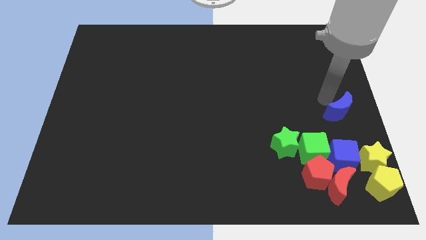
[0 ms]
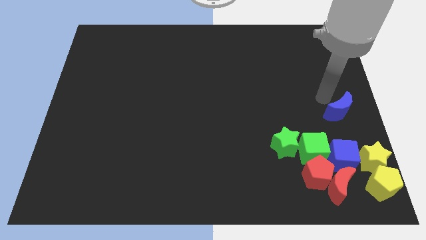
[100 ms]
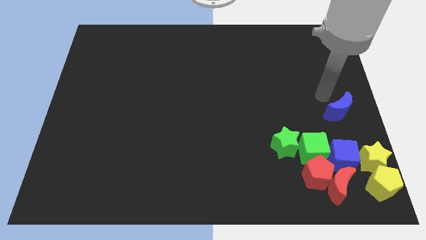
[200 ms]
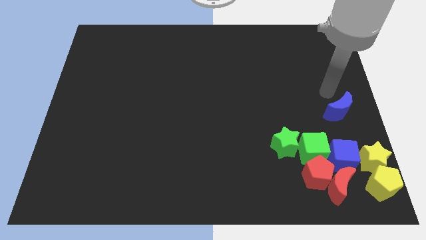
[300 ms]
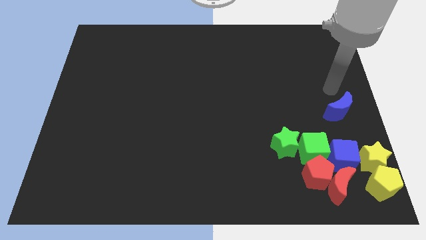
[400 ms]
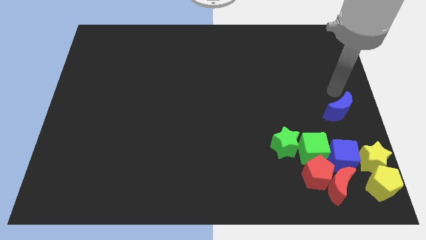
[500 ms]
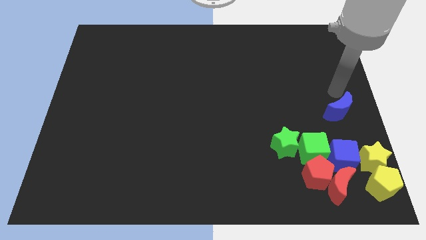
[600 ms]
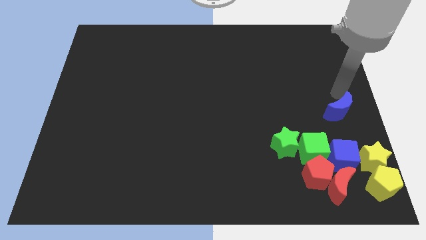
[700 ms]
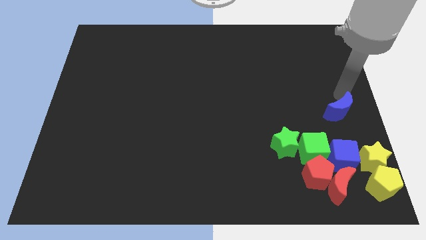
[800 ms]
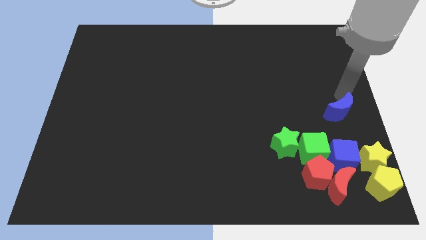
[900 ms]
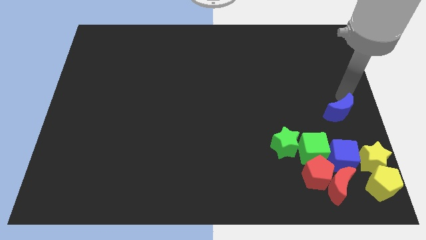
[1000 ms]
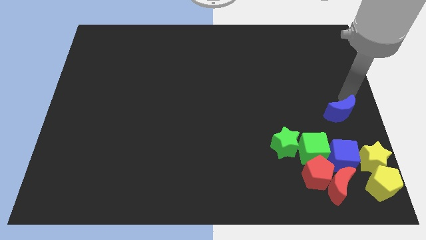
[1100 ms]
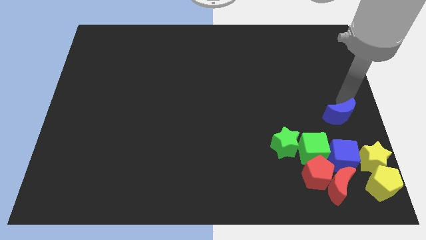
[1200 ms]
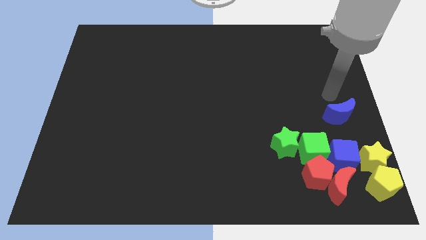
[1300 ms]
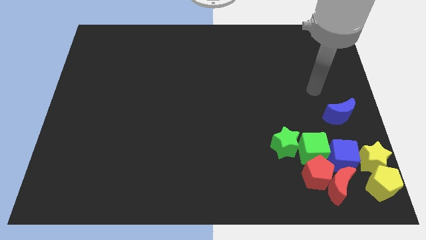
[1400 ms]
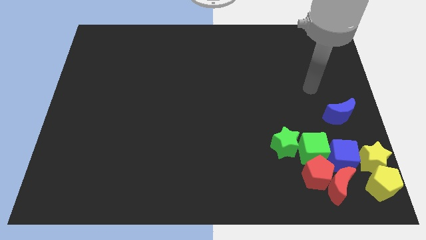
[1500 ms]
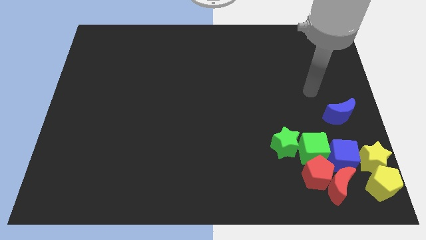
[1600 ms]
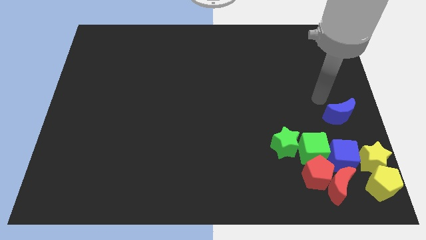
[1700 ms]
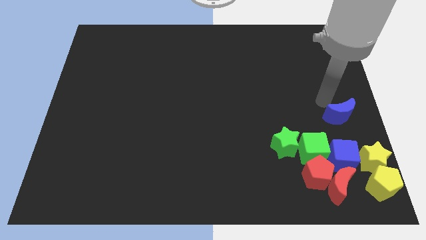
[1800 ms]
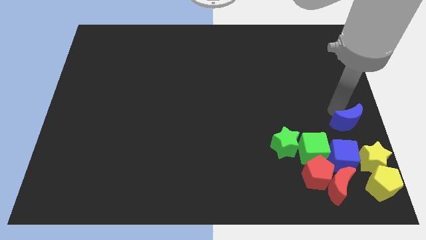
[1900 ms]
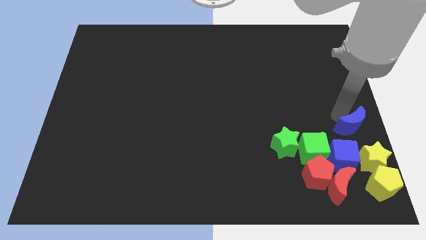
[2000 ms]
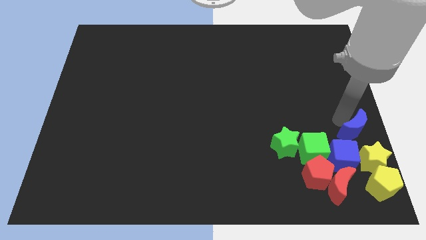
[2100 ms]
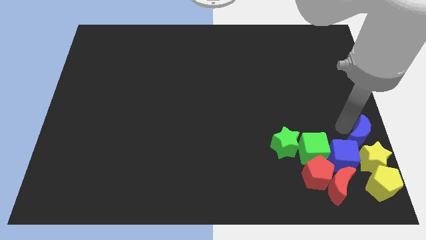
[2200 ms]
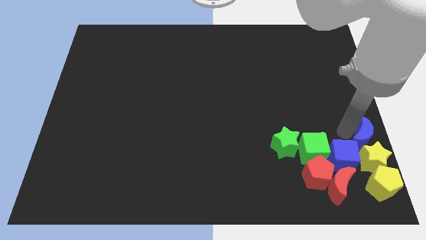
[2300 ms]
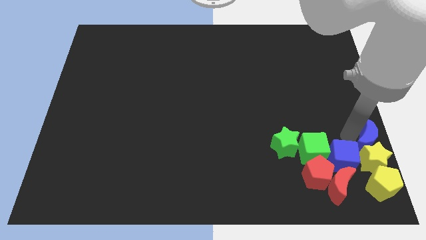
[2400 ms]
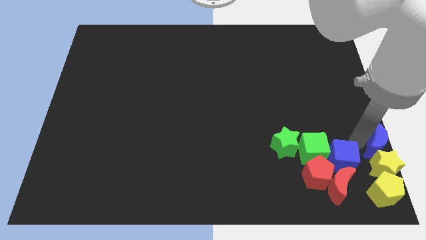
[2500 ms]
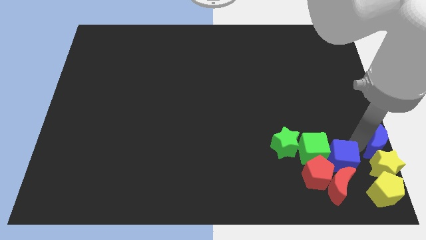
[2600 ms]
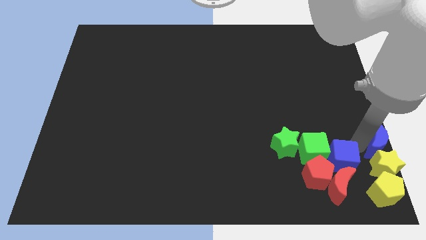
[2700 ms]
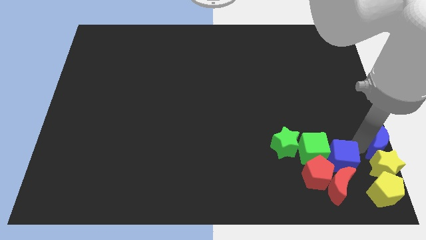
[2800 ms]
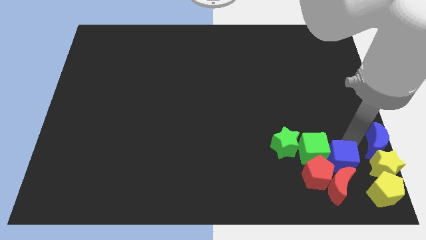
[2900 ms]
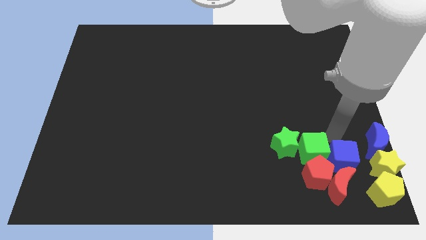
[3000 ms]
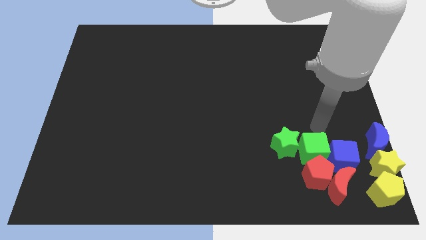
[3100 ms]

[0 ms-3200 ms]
push the blue crescent into the top of the yellow star

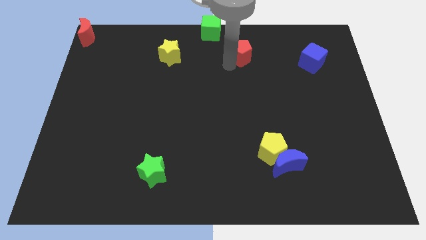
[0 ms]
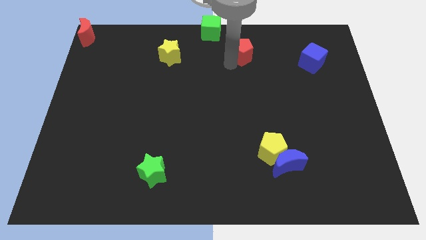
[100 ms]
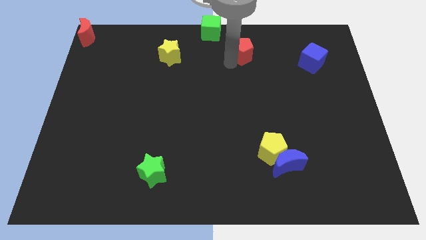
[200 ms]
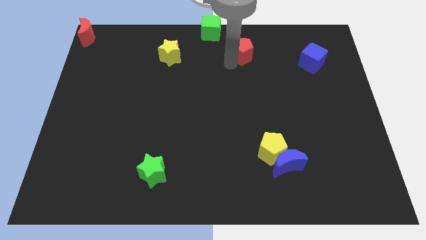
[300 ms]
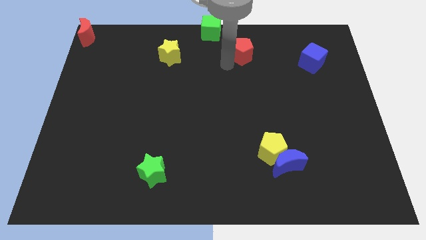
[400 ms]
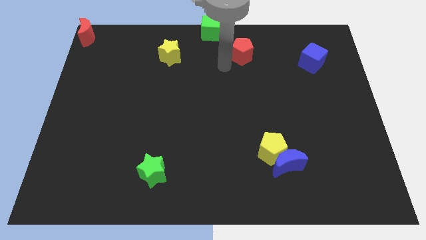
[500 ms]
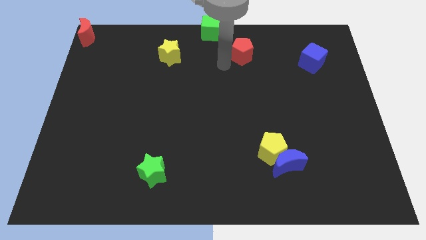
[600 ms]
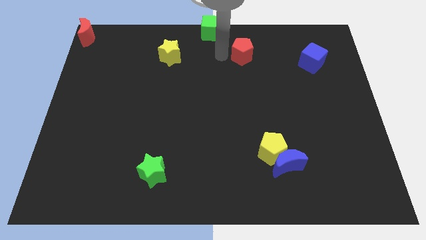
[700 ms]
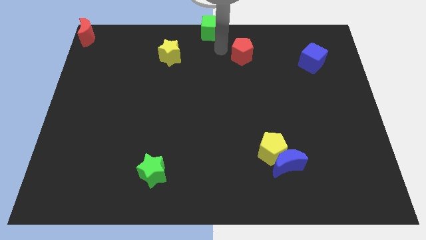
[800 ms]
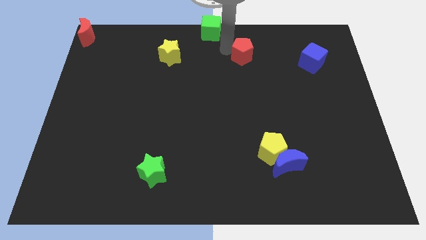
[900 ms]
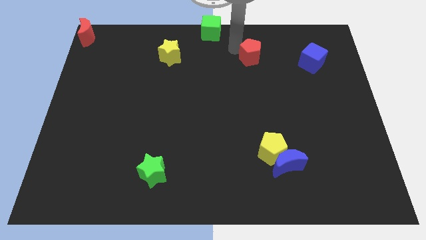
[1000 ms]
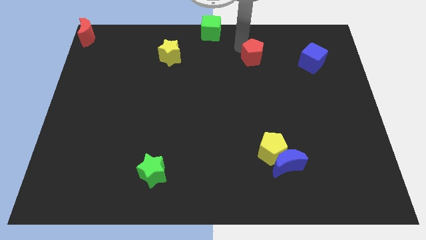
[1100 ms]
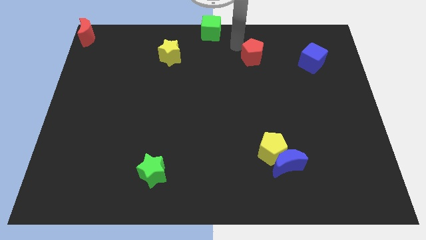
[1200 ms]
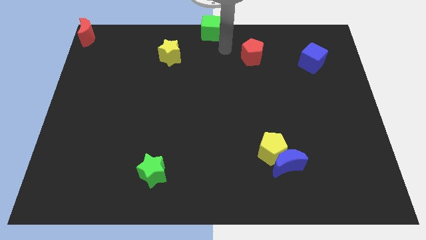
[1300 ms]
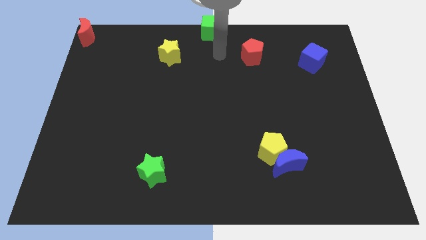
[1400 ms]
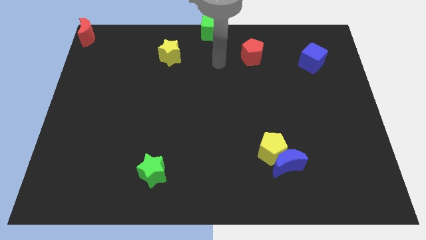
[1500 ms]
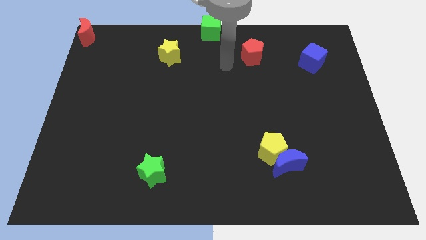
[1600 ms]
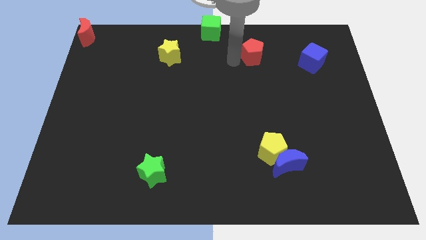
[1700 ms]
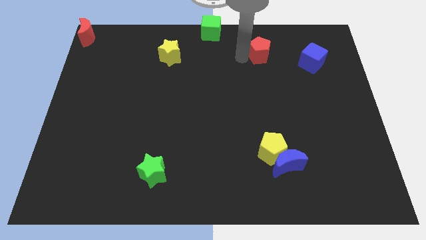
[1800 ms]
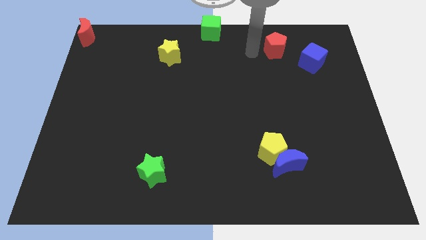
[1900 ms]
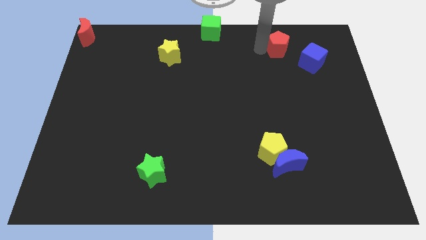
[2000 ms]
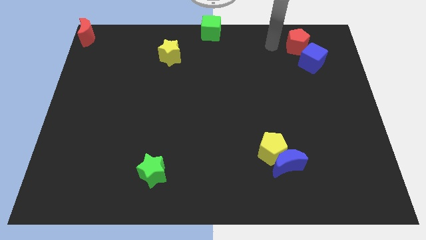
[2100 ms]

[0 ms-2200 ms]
push red pentagon above blue cube

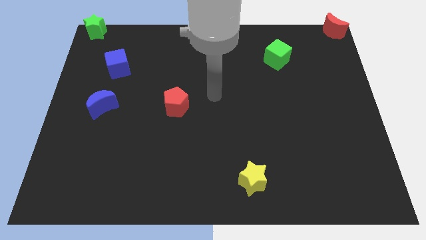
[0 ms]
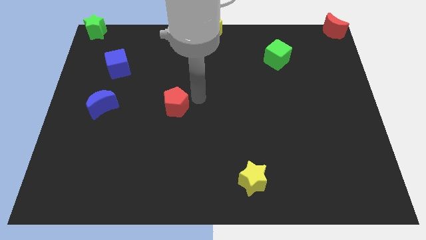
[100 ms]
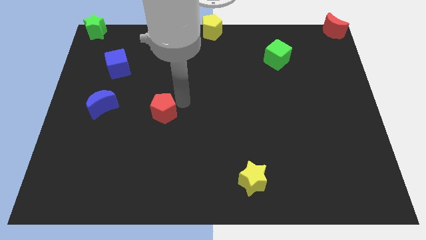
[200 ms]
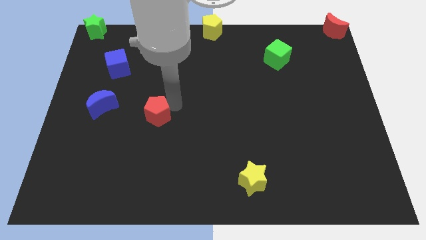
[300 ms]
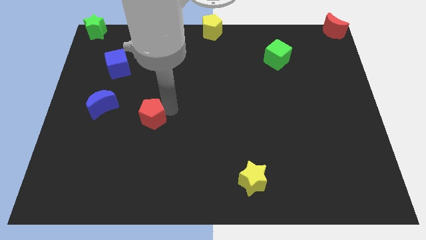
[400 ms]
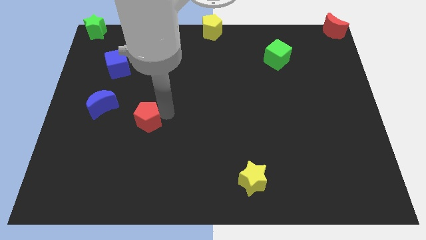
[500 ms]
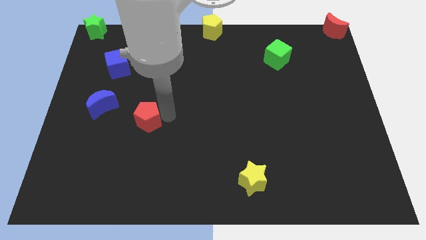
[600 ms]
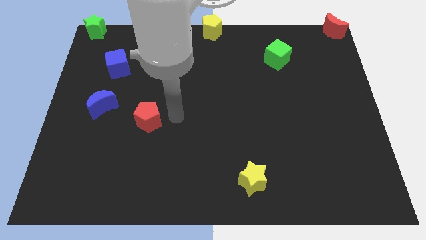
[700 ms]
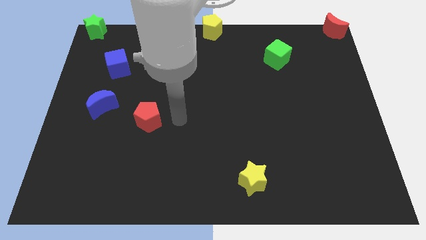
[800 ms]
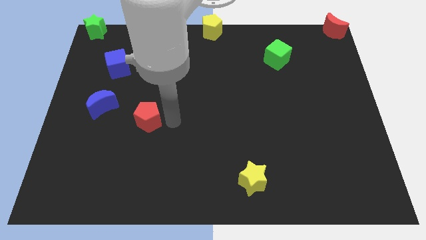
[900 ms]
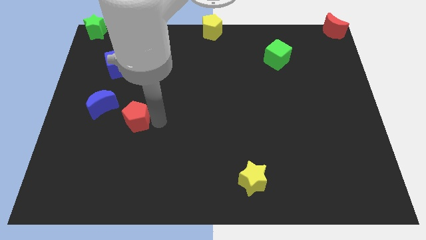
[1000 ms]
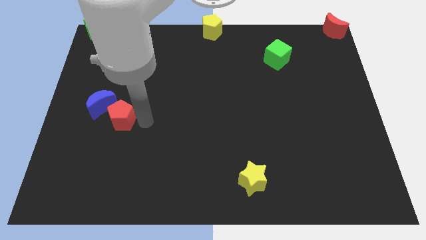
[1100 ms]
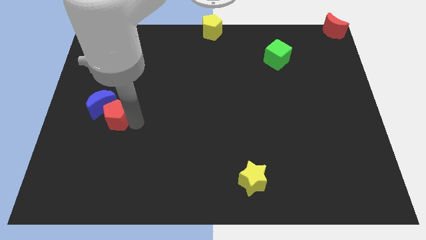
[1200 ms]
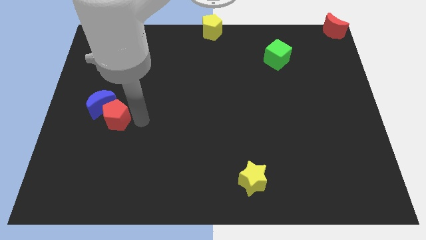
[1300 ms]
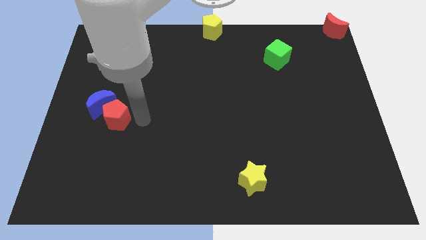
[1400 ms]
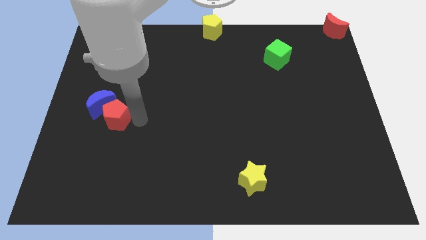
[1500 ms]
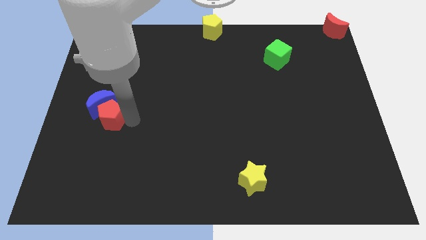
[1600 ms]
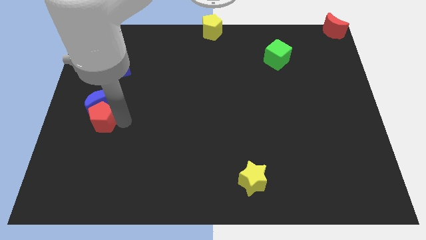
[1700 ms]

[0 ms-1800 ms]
move the red pentagon below to the blue moon

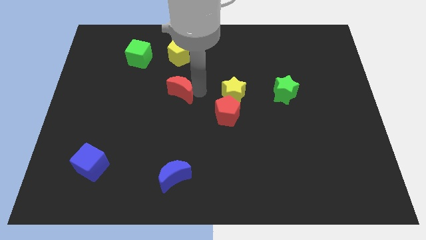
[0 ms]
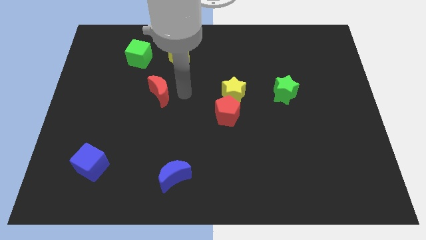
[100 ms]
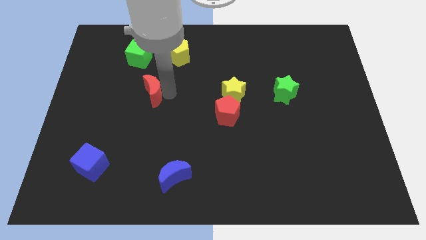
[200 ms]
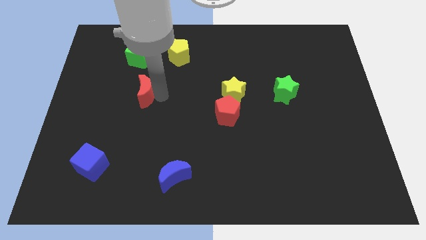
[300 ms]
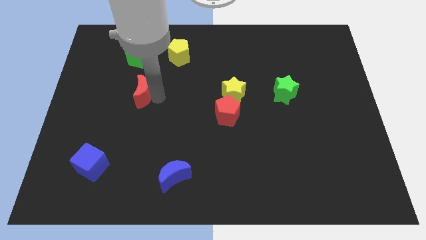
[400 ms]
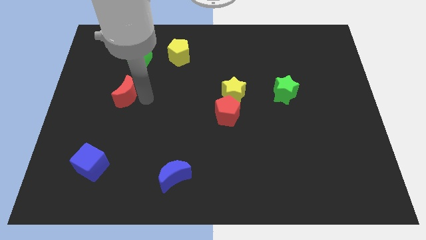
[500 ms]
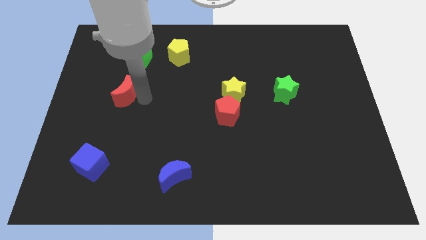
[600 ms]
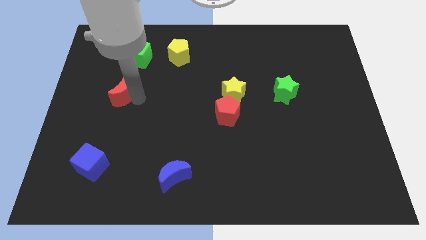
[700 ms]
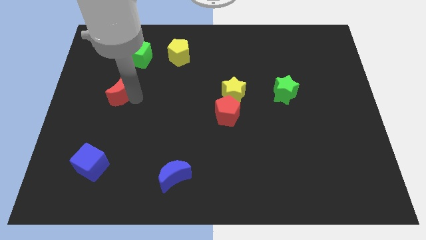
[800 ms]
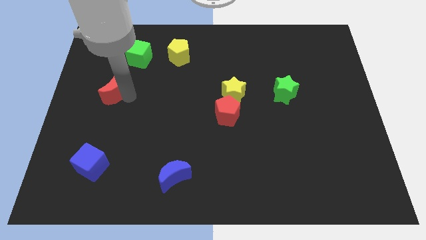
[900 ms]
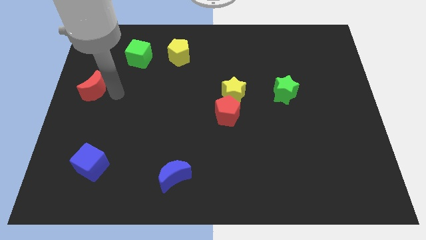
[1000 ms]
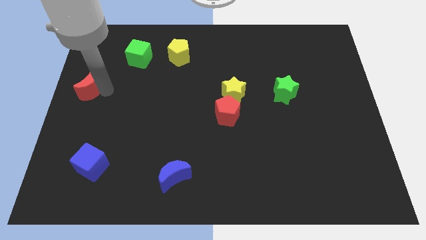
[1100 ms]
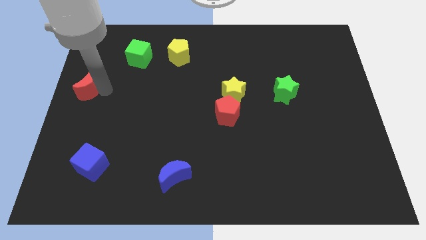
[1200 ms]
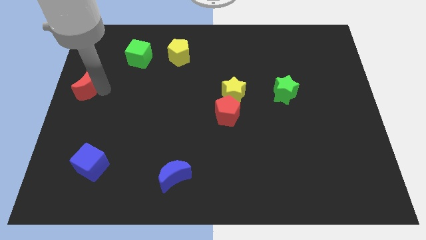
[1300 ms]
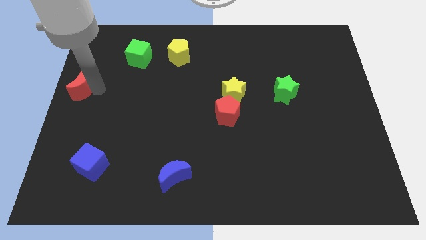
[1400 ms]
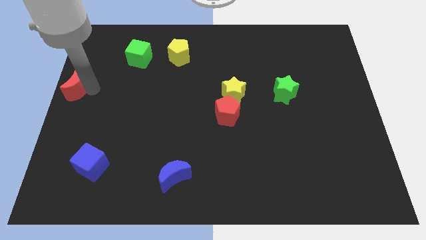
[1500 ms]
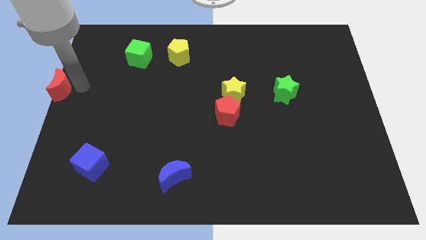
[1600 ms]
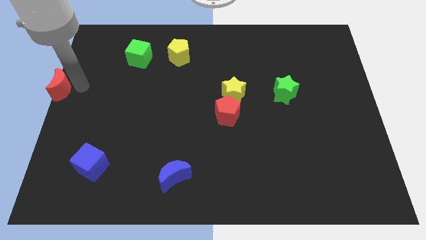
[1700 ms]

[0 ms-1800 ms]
place the red crescent at the center left of the board
